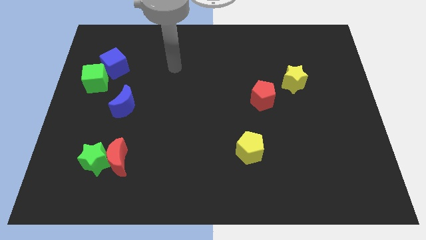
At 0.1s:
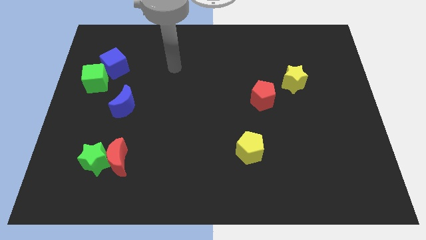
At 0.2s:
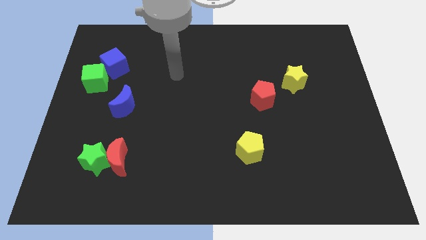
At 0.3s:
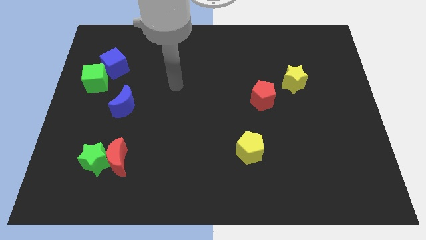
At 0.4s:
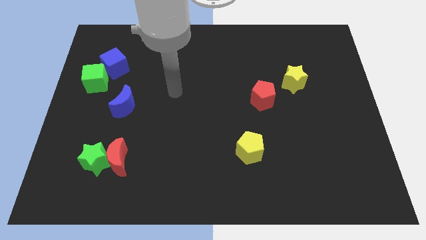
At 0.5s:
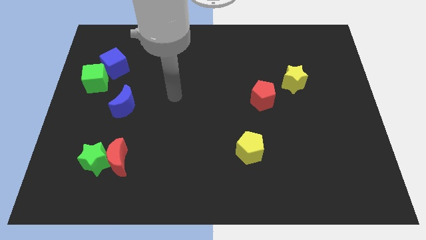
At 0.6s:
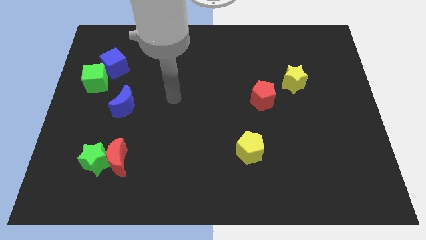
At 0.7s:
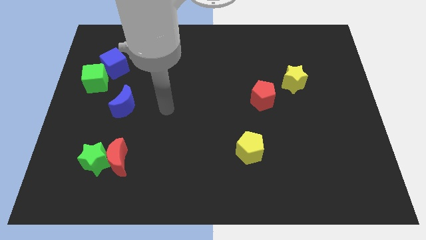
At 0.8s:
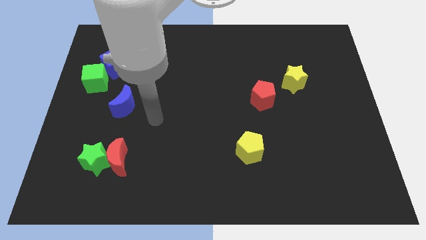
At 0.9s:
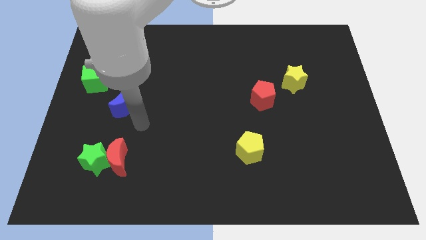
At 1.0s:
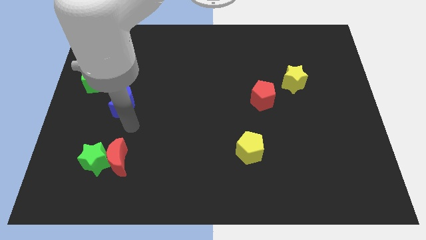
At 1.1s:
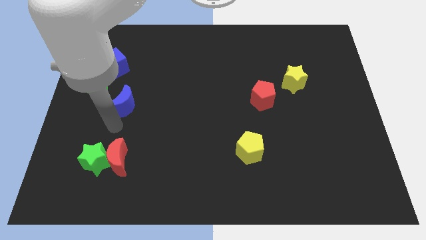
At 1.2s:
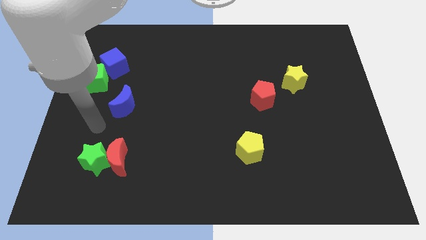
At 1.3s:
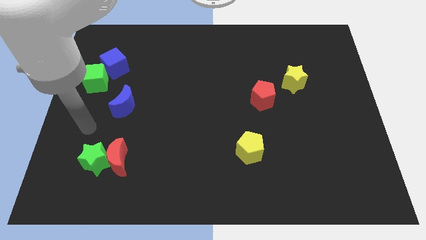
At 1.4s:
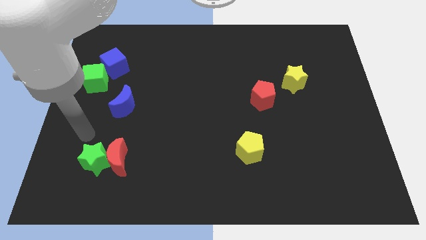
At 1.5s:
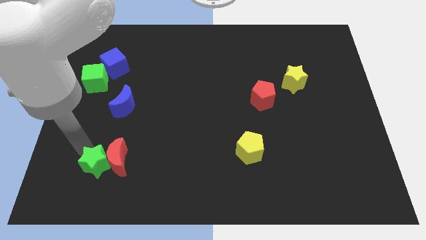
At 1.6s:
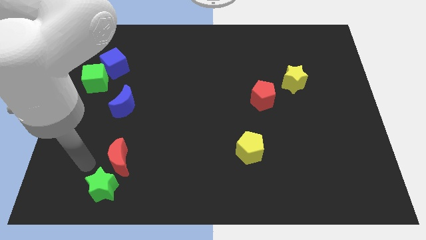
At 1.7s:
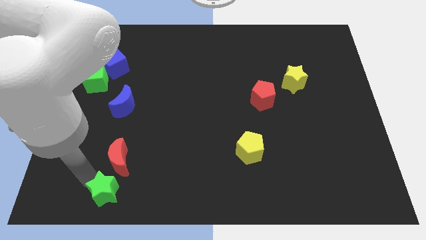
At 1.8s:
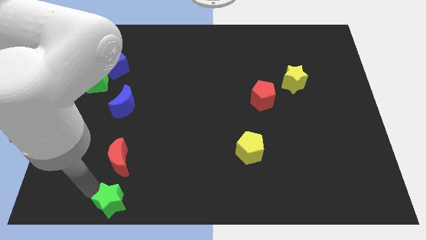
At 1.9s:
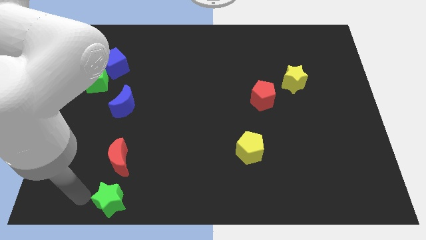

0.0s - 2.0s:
push the green star vertically below the red moon

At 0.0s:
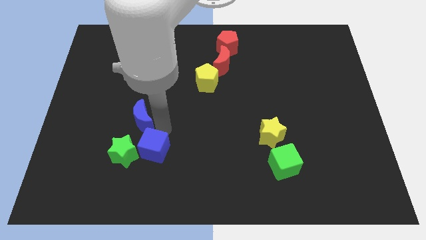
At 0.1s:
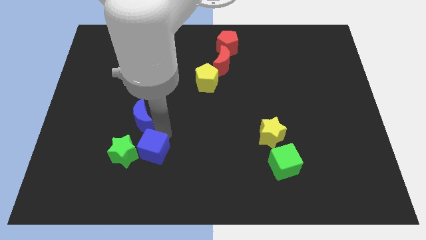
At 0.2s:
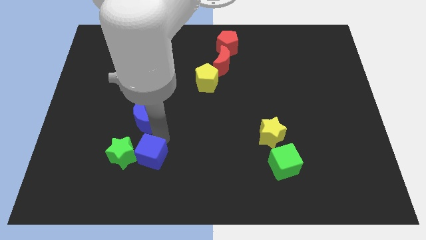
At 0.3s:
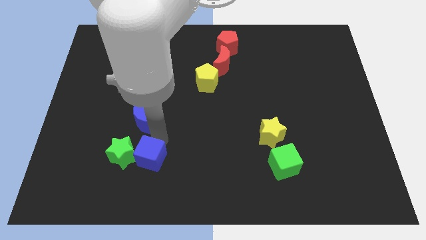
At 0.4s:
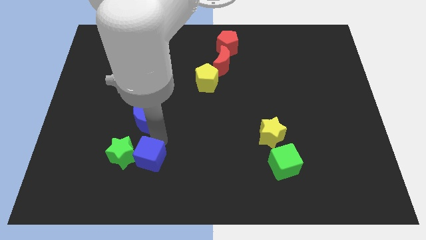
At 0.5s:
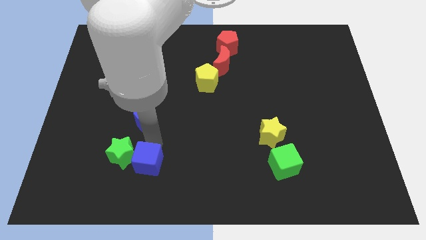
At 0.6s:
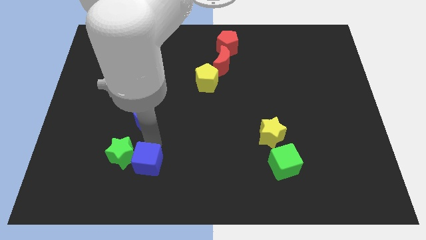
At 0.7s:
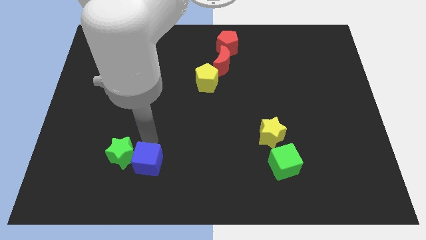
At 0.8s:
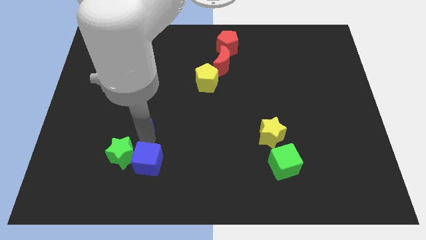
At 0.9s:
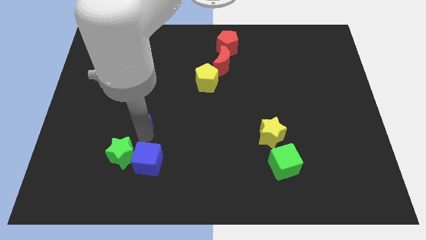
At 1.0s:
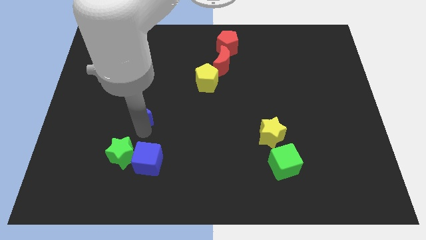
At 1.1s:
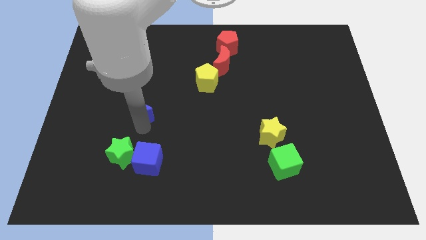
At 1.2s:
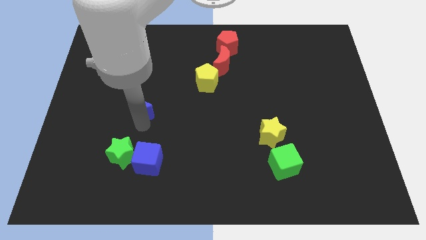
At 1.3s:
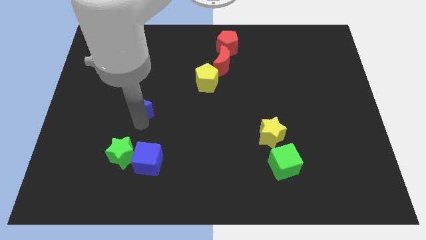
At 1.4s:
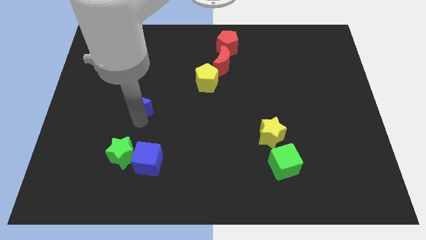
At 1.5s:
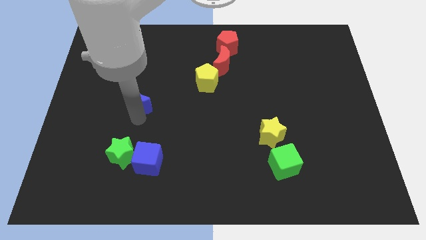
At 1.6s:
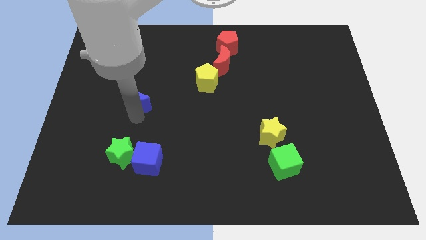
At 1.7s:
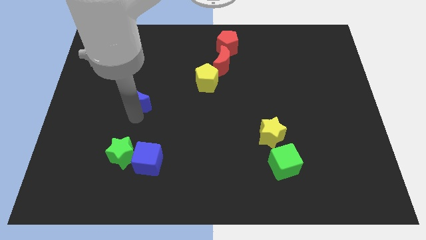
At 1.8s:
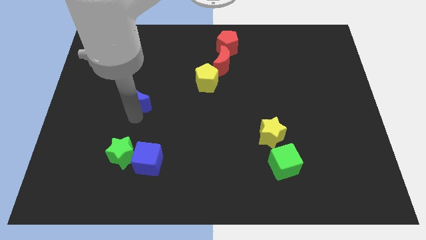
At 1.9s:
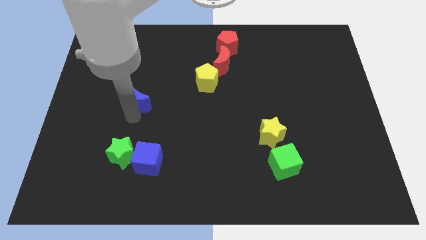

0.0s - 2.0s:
separate blue cube and the blue crescent

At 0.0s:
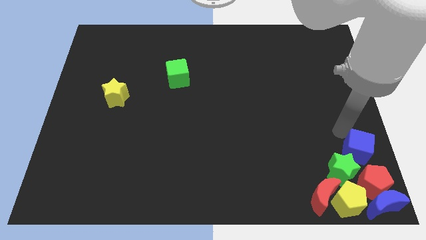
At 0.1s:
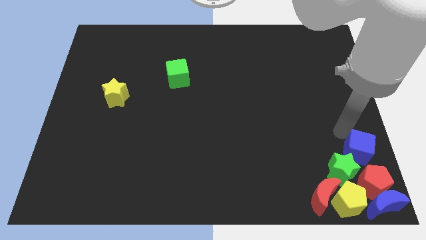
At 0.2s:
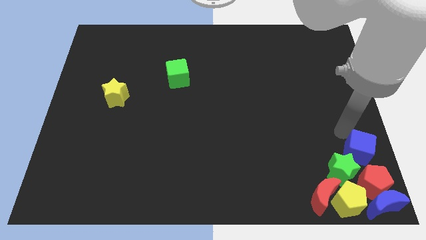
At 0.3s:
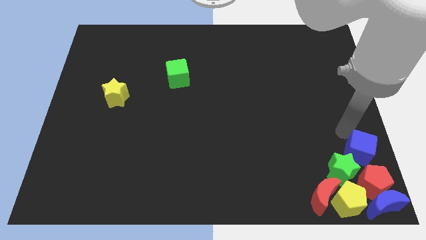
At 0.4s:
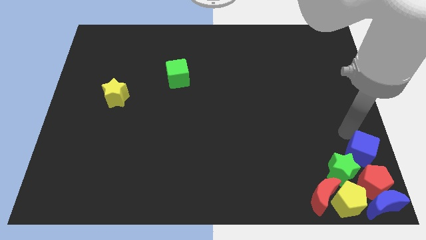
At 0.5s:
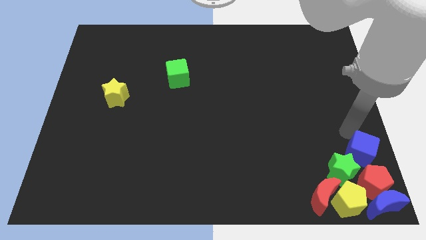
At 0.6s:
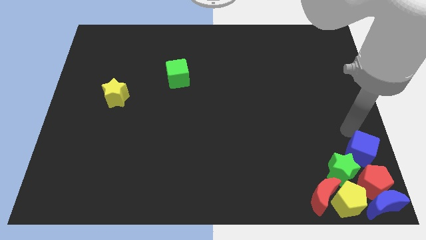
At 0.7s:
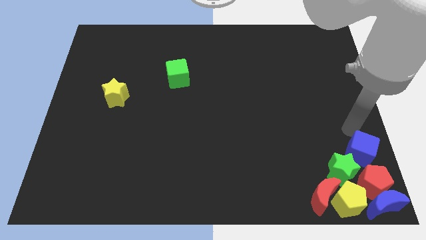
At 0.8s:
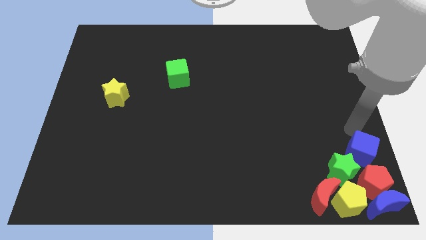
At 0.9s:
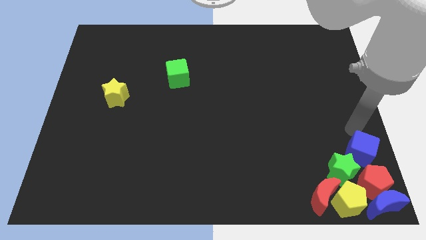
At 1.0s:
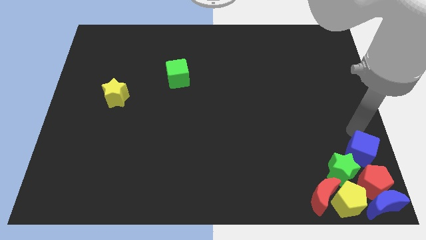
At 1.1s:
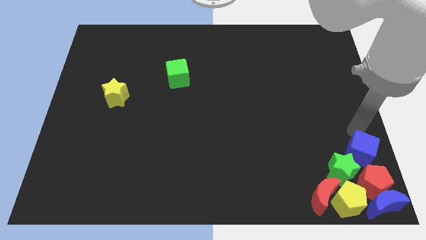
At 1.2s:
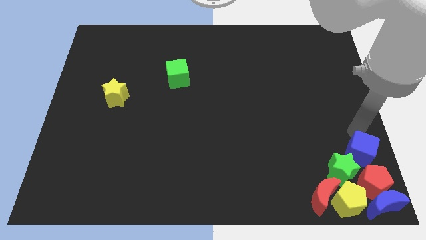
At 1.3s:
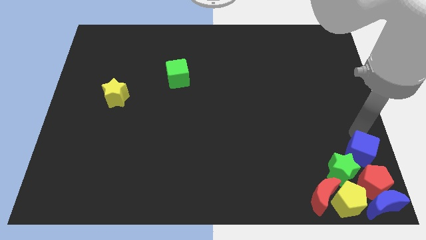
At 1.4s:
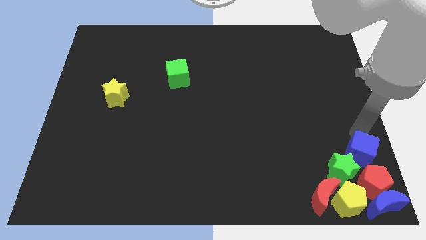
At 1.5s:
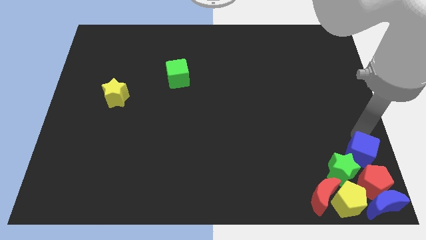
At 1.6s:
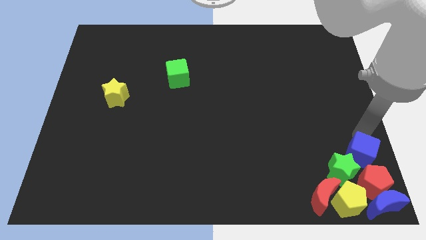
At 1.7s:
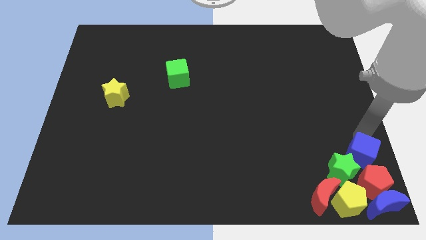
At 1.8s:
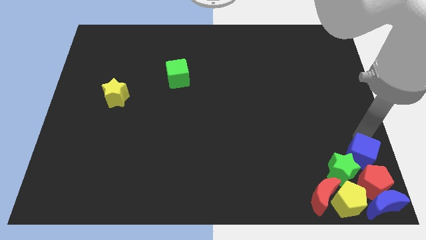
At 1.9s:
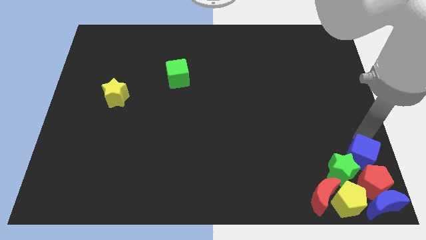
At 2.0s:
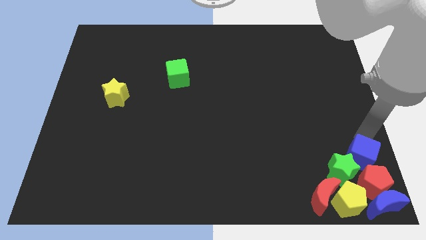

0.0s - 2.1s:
place the blue cube above the red pentagon

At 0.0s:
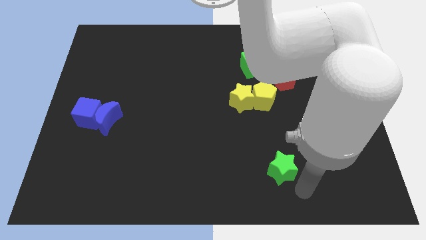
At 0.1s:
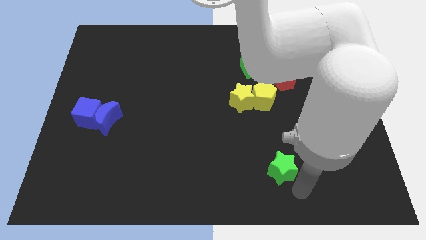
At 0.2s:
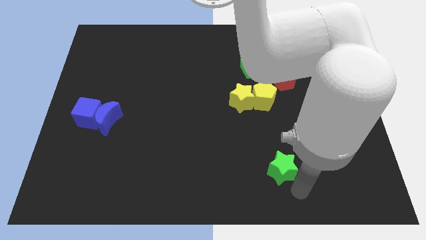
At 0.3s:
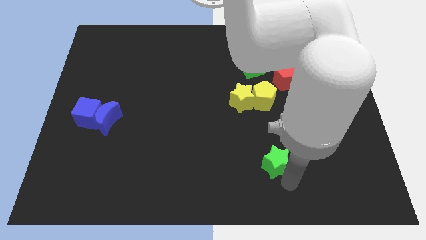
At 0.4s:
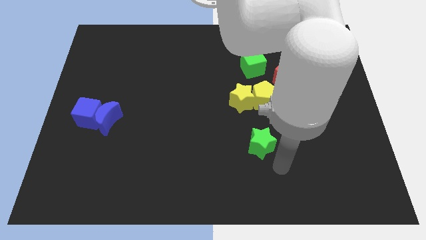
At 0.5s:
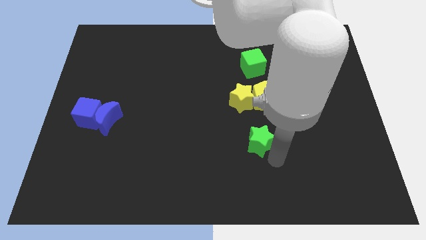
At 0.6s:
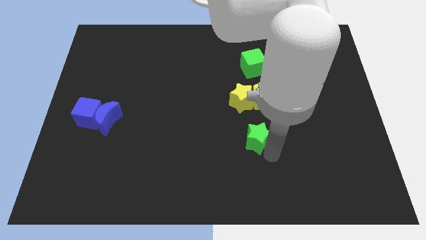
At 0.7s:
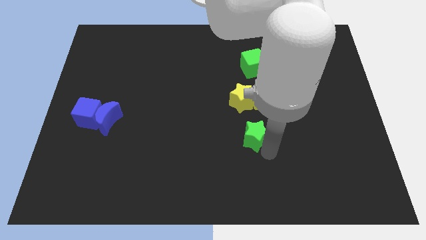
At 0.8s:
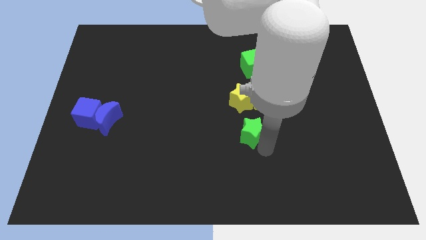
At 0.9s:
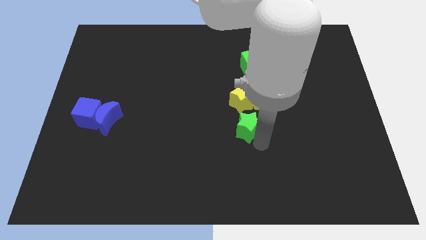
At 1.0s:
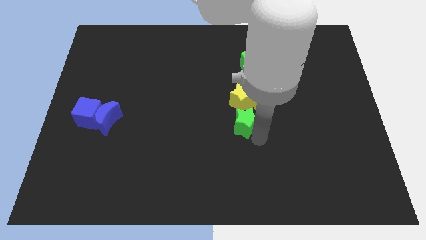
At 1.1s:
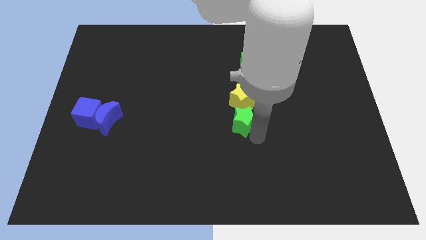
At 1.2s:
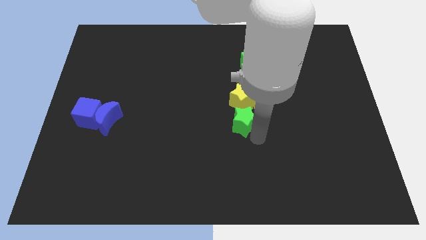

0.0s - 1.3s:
move the green star below the yellow star

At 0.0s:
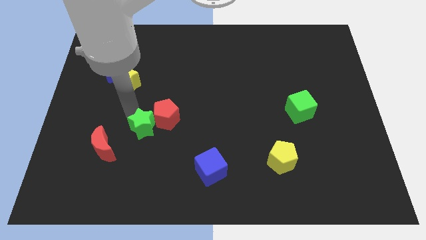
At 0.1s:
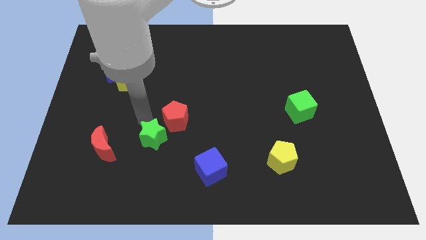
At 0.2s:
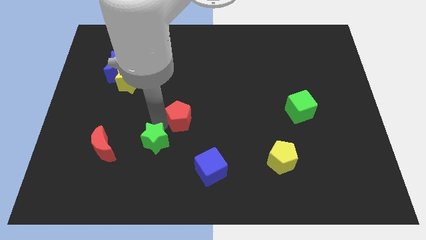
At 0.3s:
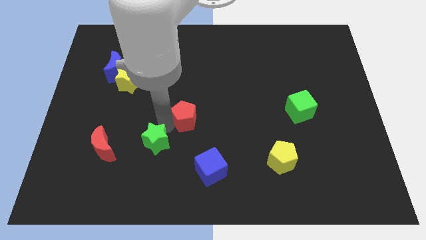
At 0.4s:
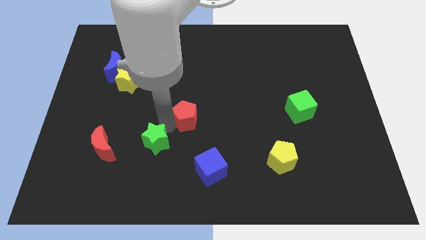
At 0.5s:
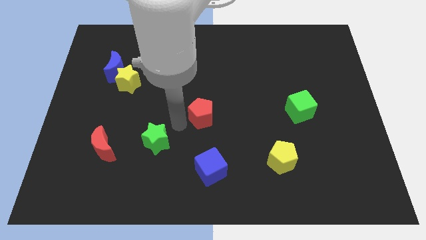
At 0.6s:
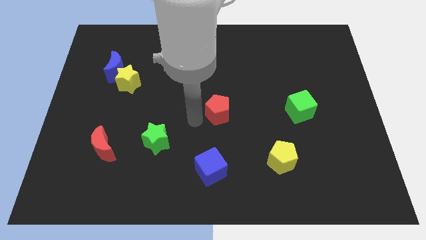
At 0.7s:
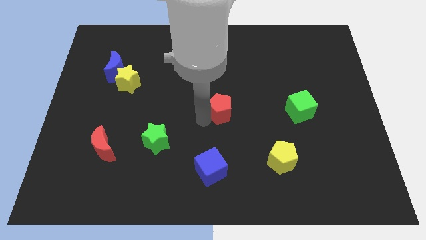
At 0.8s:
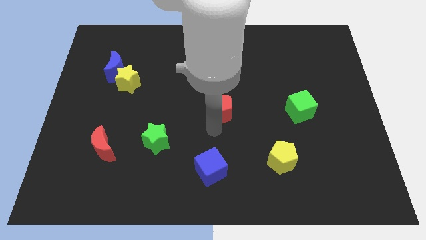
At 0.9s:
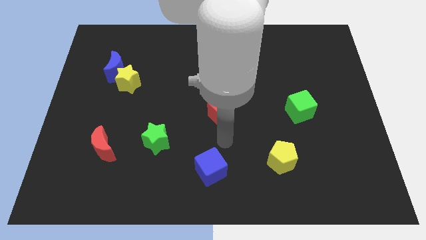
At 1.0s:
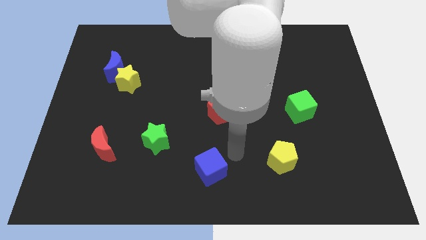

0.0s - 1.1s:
separate the green star and the red pentagon

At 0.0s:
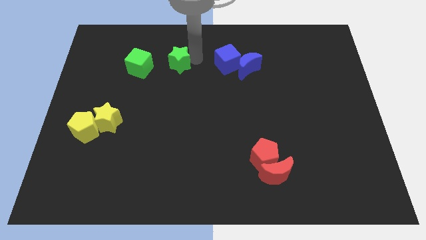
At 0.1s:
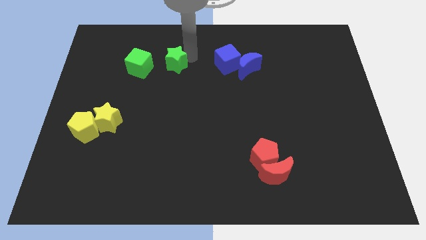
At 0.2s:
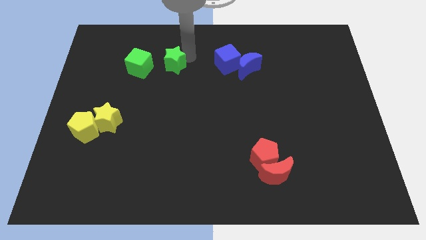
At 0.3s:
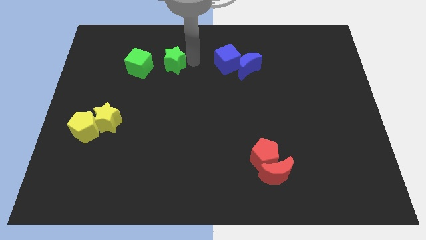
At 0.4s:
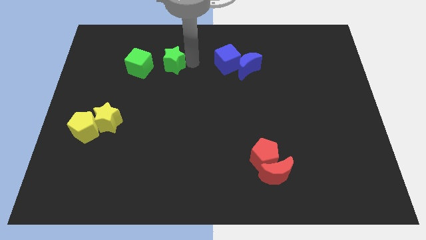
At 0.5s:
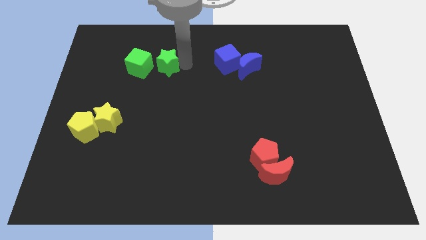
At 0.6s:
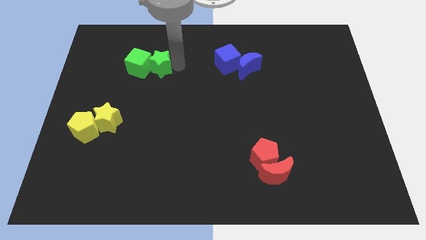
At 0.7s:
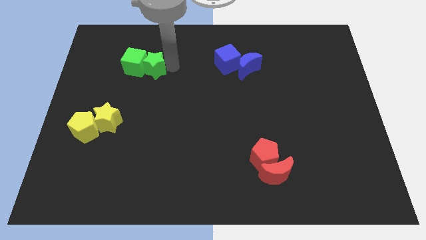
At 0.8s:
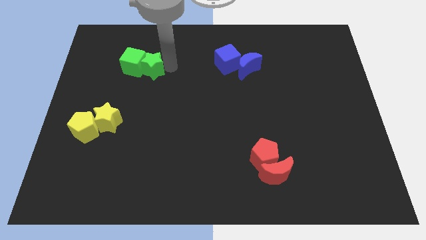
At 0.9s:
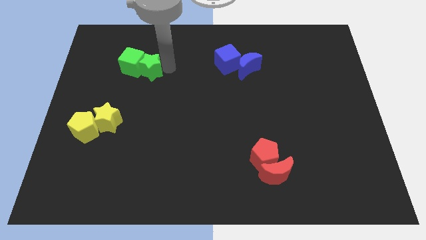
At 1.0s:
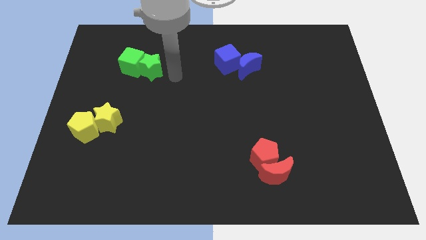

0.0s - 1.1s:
push green star into green cube
